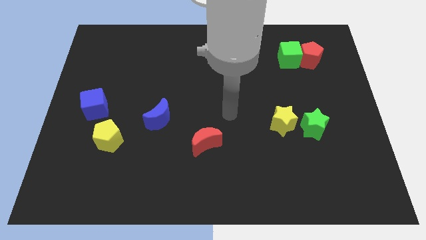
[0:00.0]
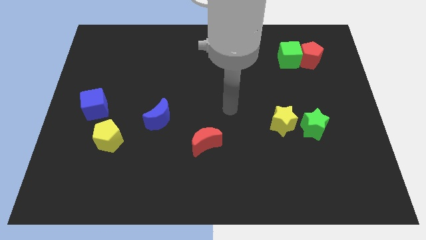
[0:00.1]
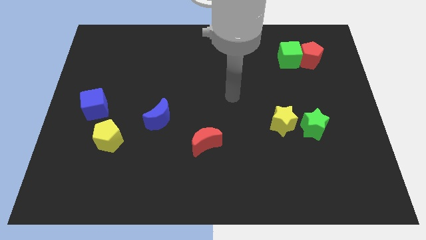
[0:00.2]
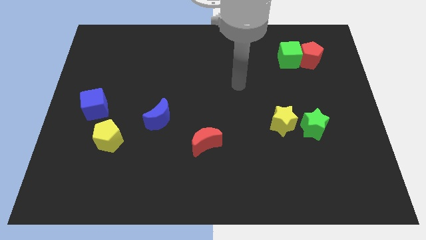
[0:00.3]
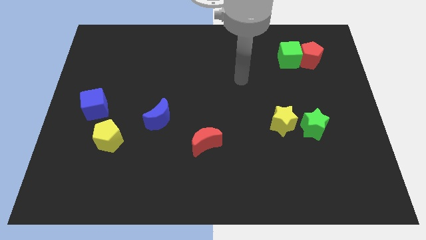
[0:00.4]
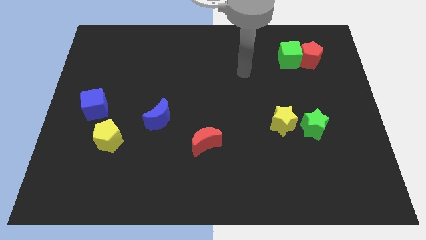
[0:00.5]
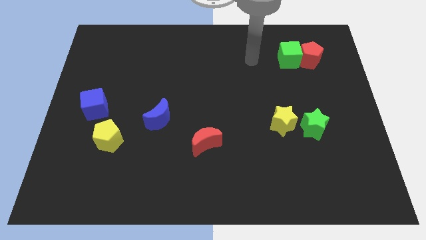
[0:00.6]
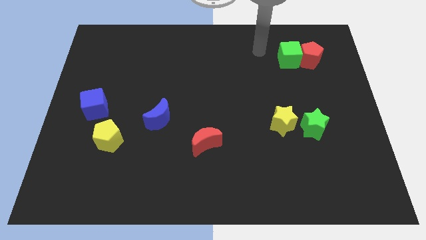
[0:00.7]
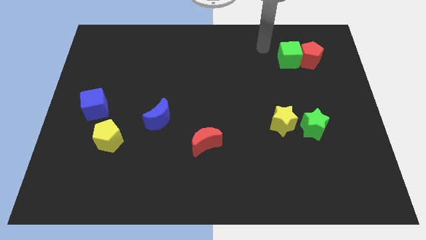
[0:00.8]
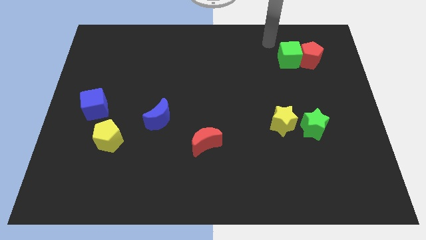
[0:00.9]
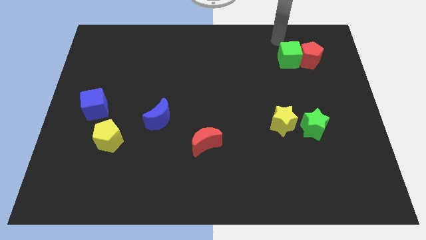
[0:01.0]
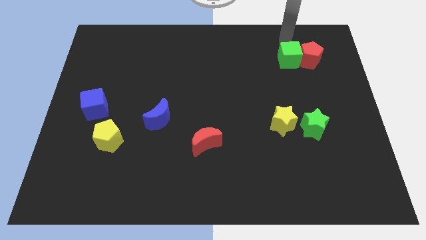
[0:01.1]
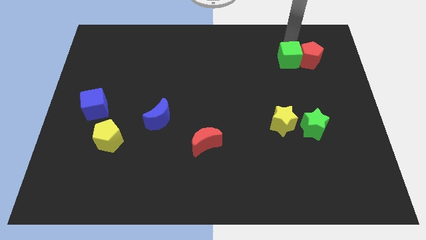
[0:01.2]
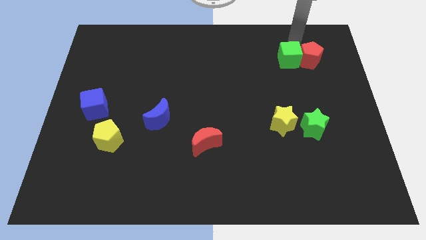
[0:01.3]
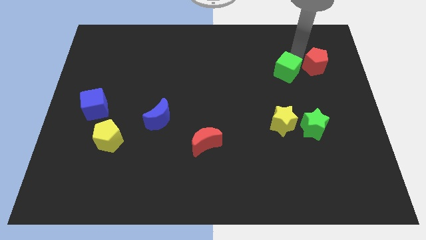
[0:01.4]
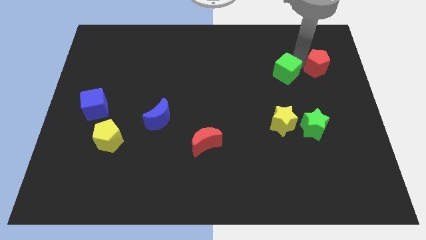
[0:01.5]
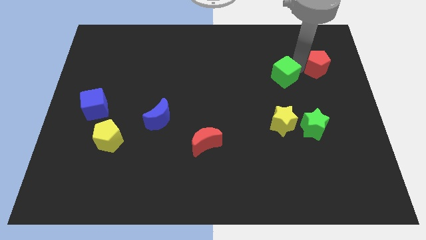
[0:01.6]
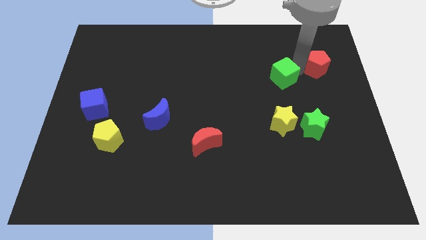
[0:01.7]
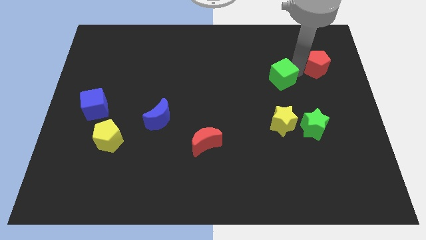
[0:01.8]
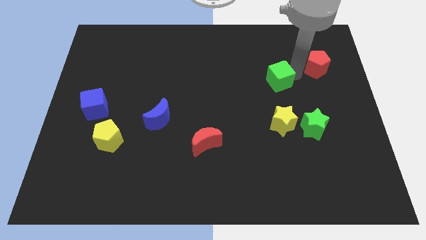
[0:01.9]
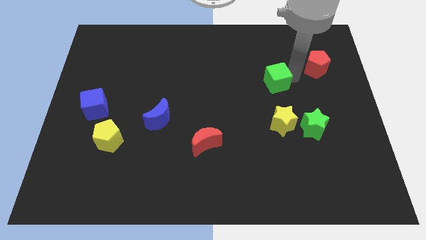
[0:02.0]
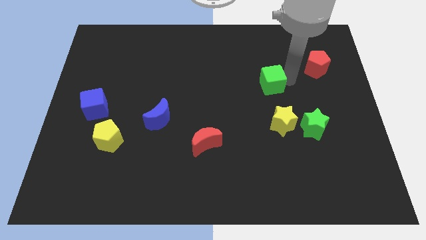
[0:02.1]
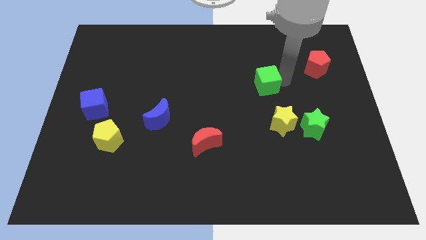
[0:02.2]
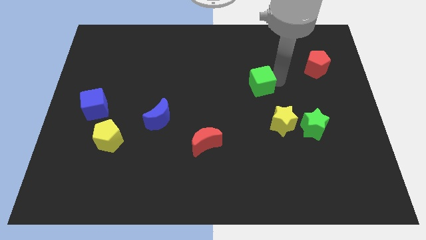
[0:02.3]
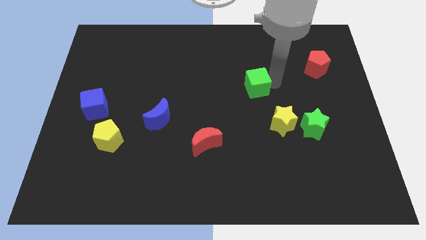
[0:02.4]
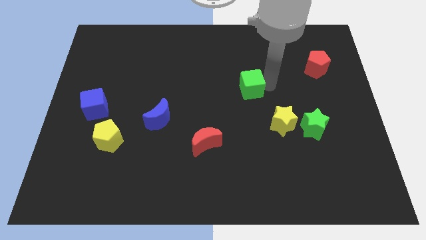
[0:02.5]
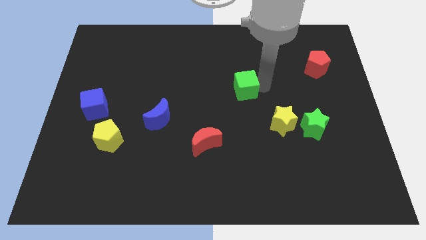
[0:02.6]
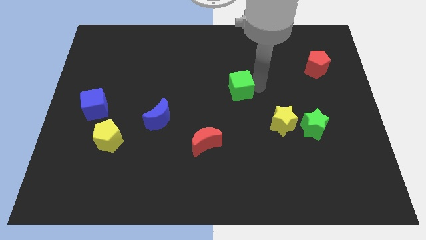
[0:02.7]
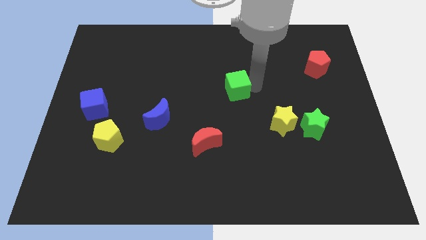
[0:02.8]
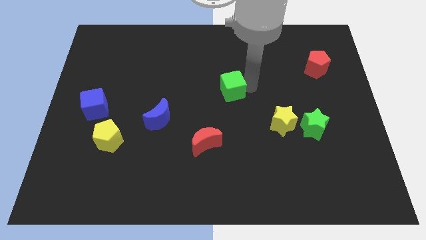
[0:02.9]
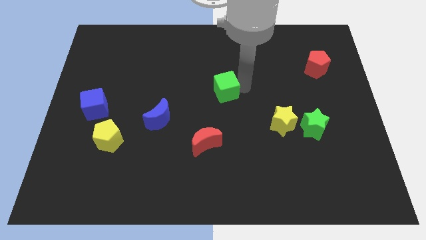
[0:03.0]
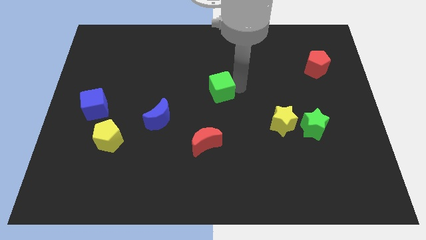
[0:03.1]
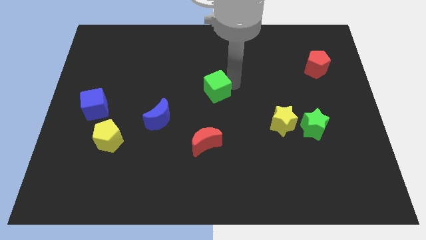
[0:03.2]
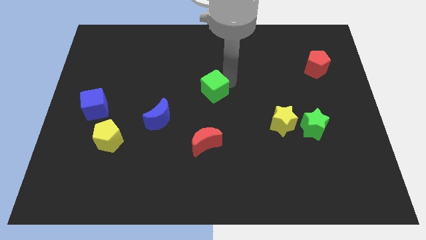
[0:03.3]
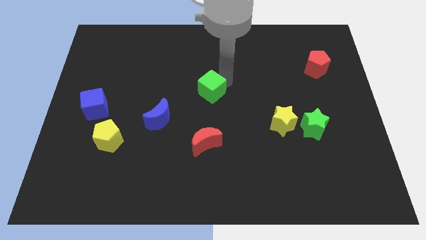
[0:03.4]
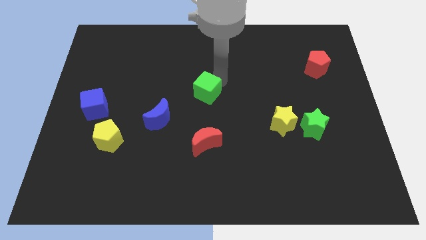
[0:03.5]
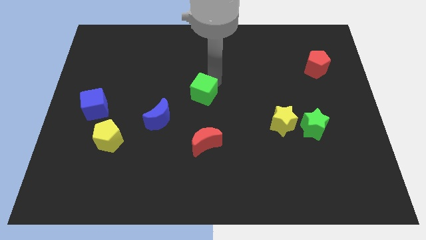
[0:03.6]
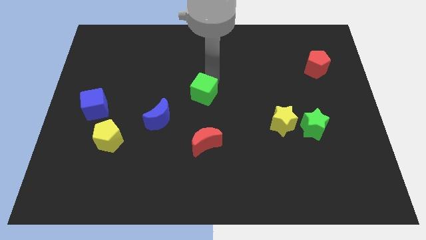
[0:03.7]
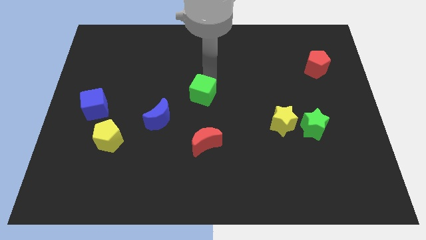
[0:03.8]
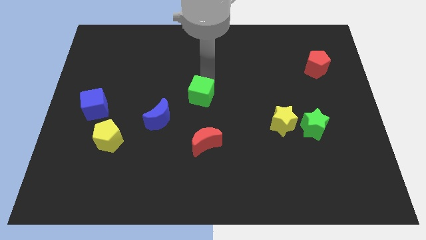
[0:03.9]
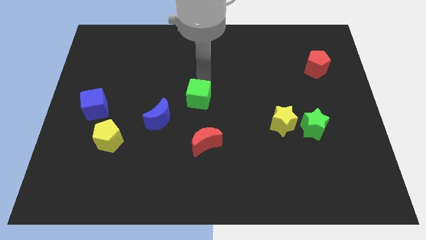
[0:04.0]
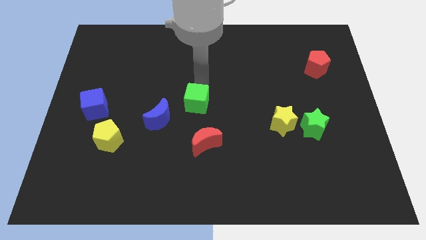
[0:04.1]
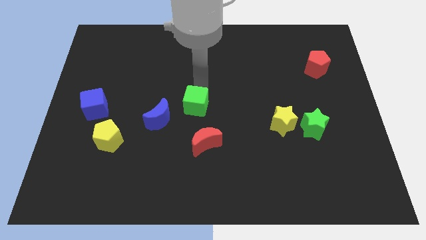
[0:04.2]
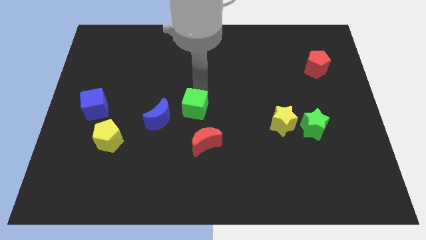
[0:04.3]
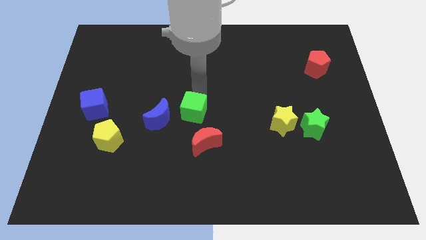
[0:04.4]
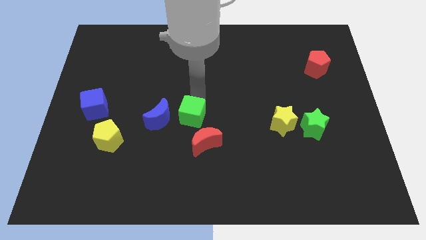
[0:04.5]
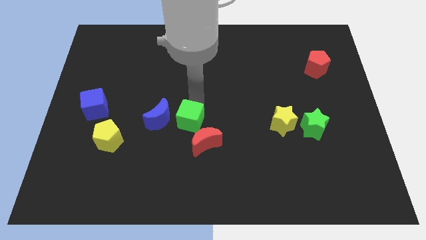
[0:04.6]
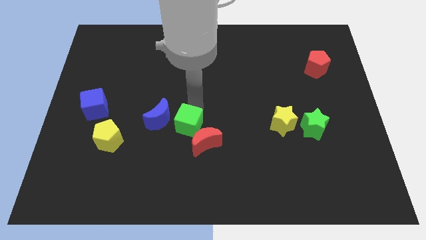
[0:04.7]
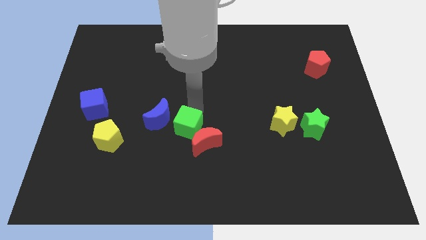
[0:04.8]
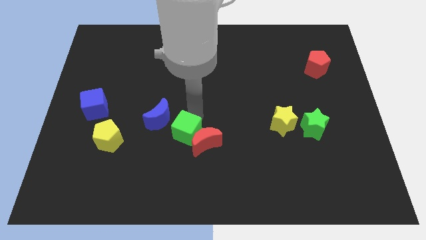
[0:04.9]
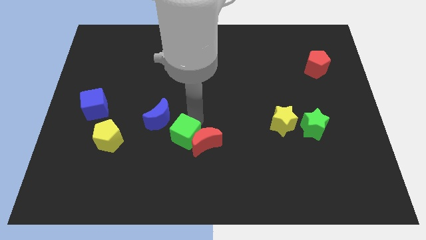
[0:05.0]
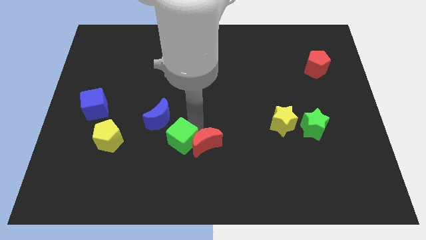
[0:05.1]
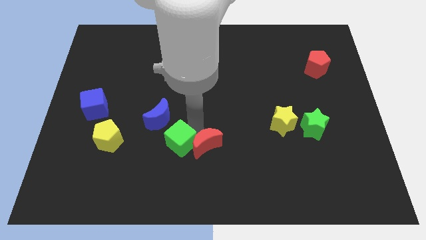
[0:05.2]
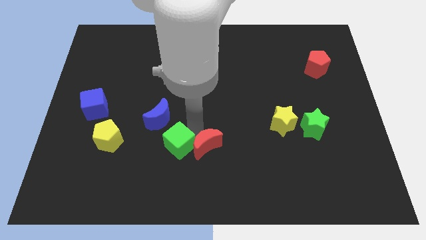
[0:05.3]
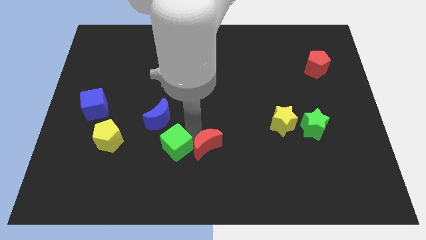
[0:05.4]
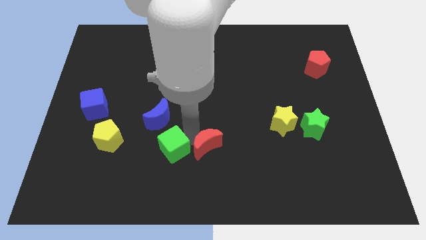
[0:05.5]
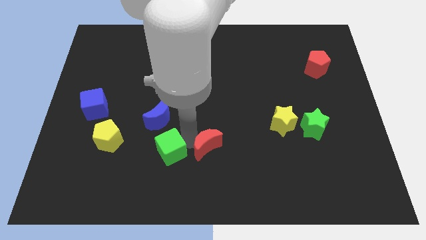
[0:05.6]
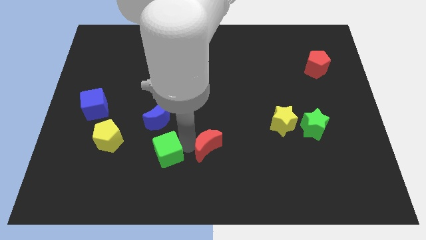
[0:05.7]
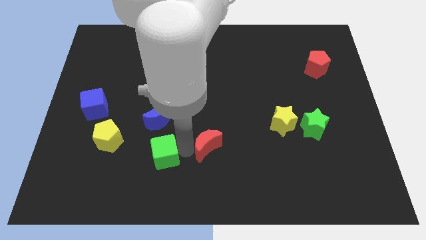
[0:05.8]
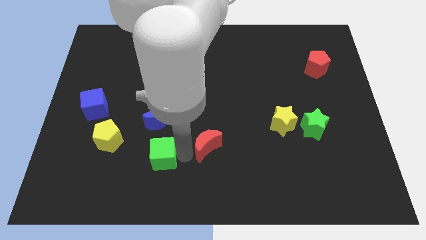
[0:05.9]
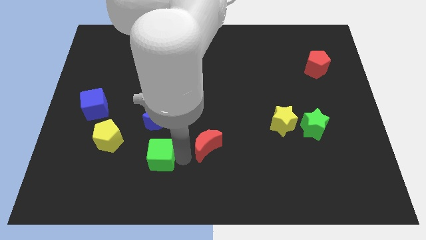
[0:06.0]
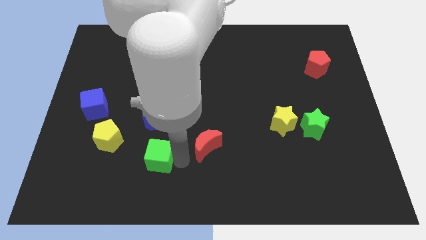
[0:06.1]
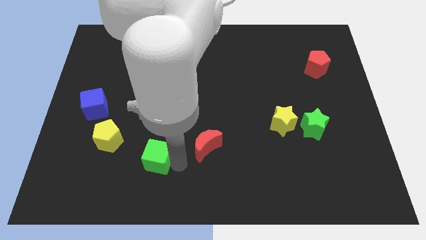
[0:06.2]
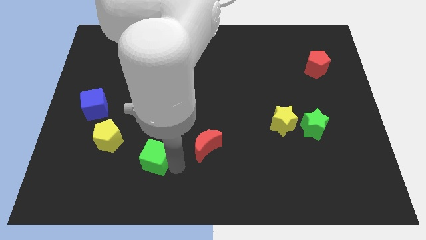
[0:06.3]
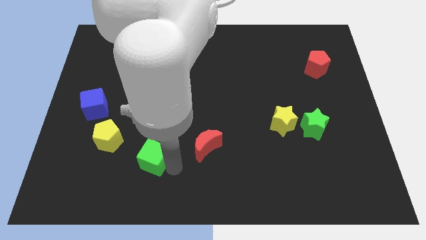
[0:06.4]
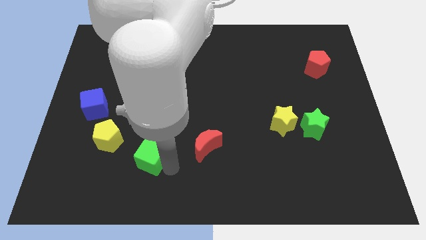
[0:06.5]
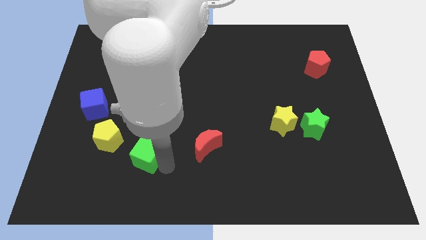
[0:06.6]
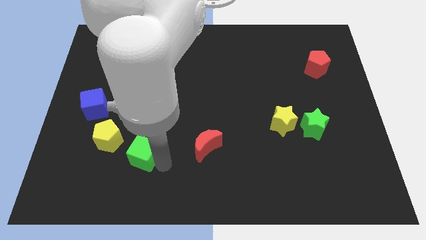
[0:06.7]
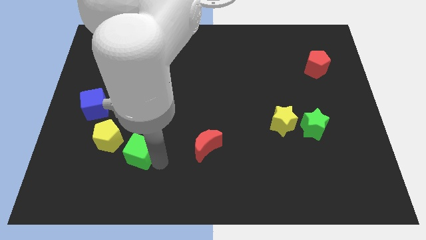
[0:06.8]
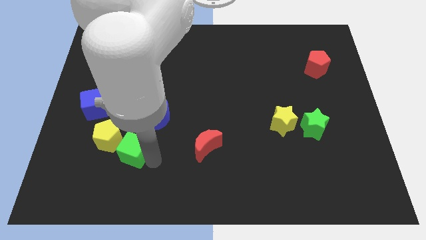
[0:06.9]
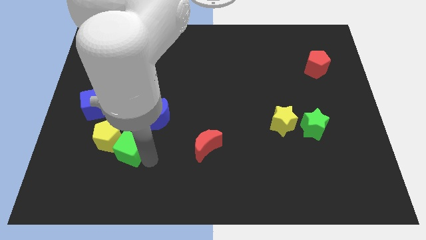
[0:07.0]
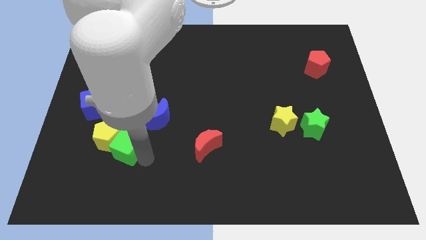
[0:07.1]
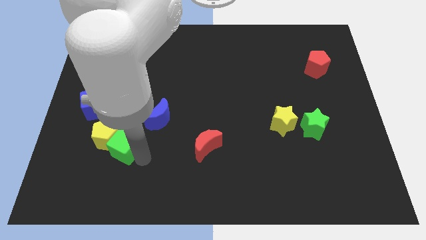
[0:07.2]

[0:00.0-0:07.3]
put the green cube close to the yellow pentagon

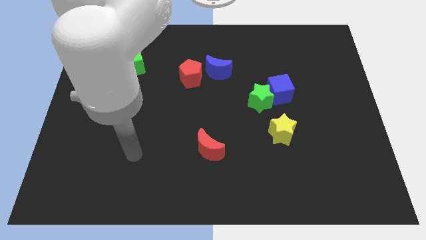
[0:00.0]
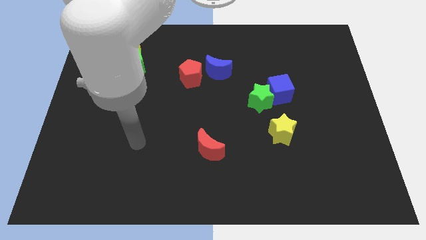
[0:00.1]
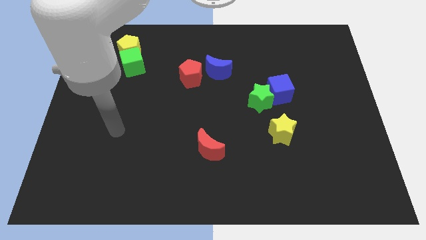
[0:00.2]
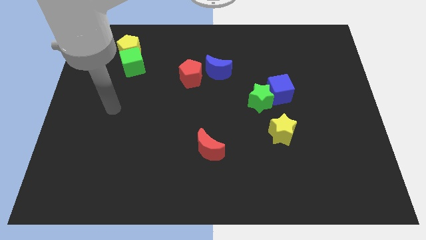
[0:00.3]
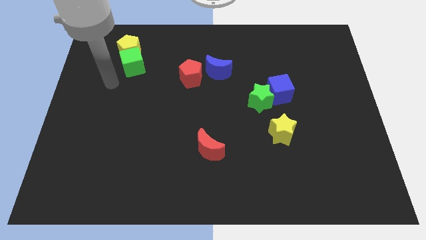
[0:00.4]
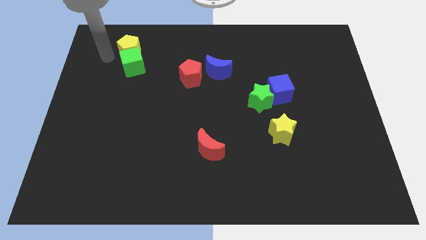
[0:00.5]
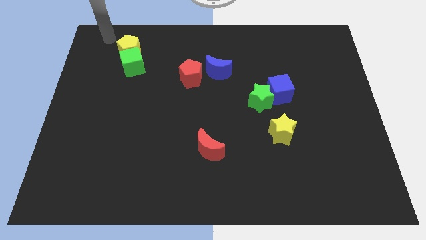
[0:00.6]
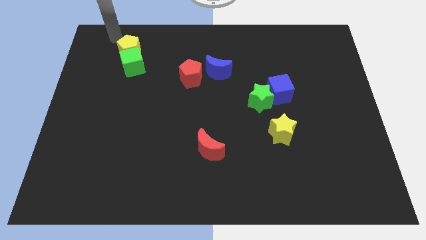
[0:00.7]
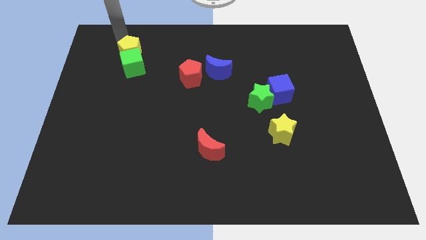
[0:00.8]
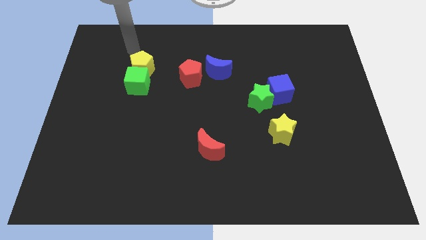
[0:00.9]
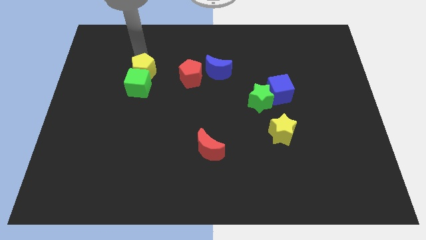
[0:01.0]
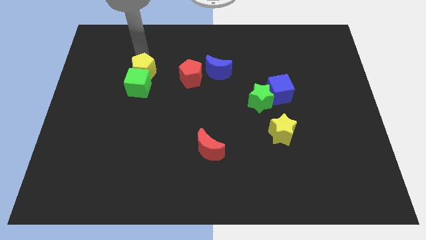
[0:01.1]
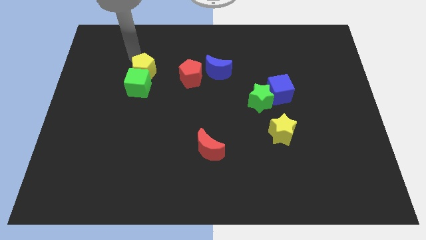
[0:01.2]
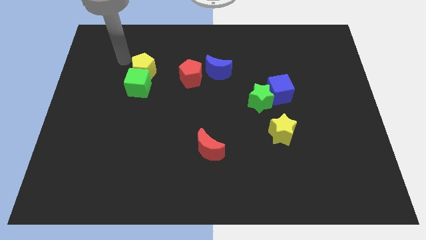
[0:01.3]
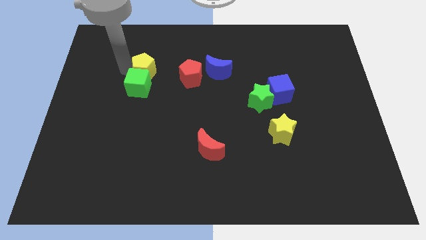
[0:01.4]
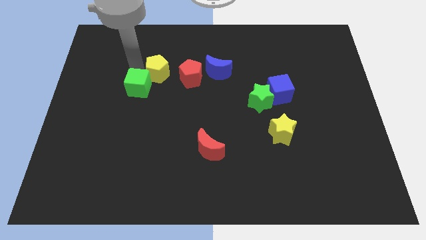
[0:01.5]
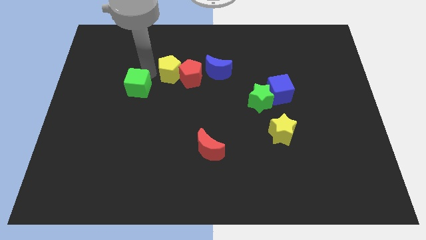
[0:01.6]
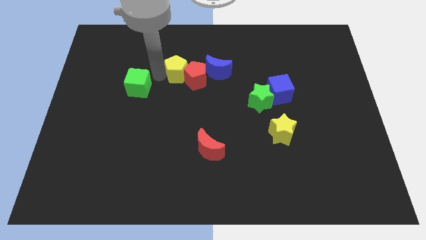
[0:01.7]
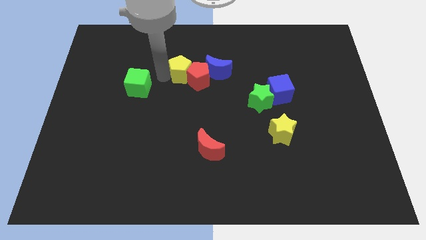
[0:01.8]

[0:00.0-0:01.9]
put the yellow pentagon next to the red pentagon
